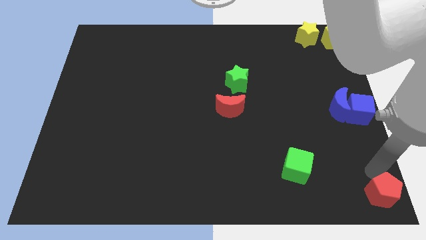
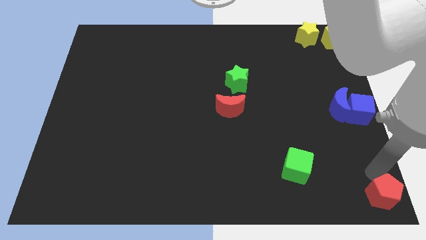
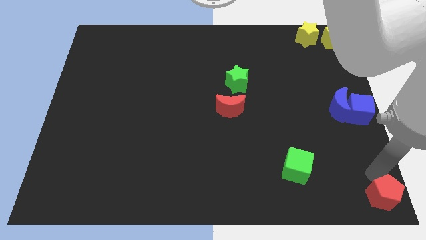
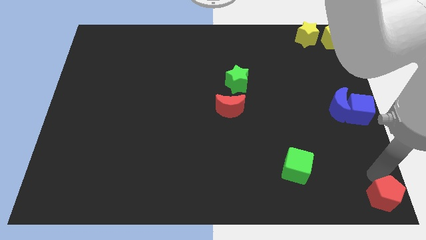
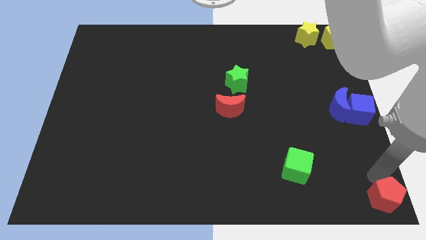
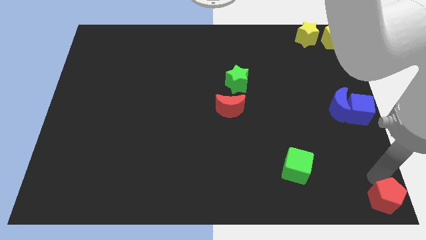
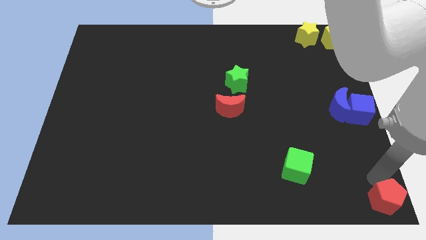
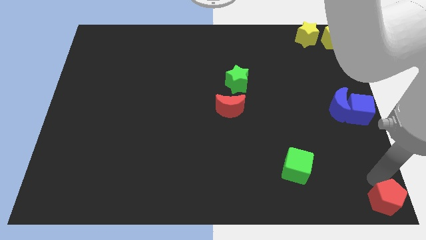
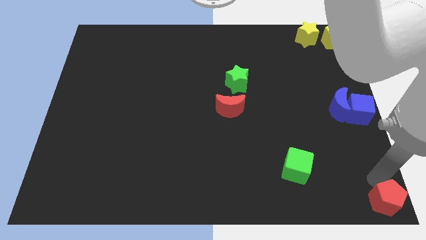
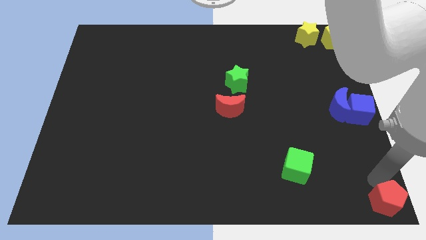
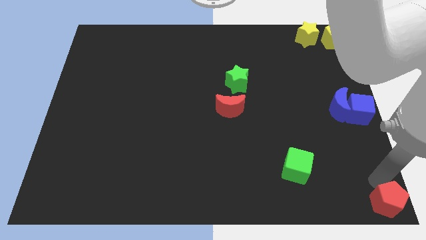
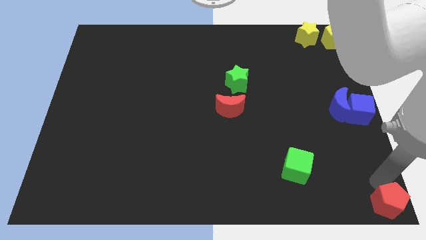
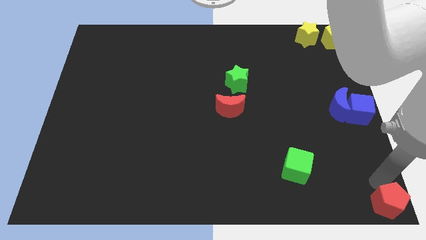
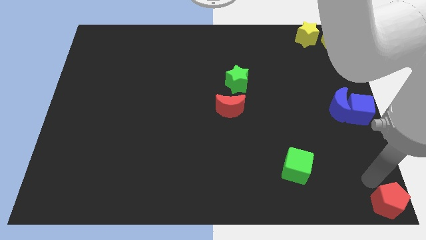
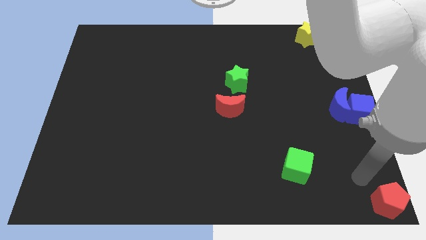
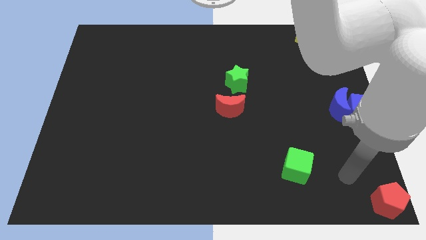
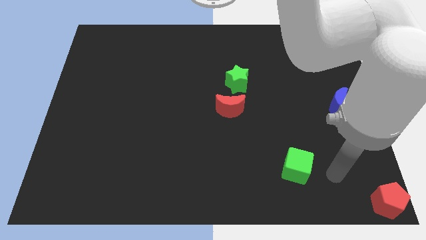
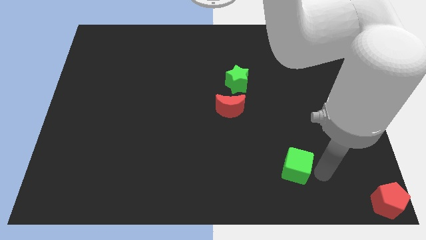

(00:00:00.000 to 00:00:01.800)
place the red pentagon to the bottom right corner of the board

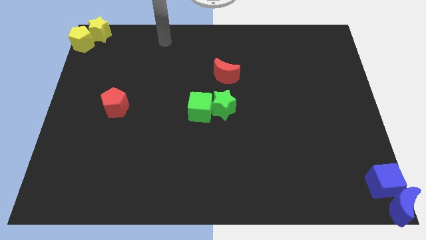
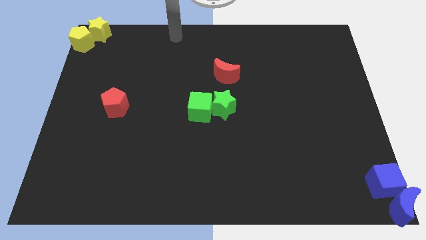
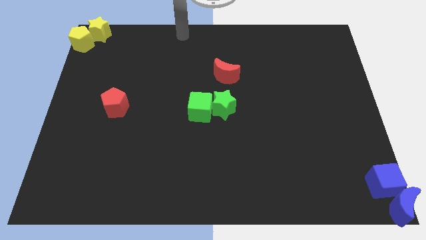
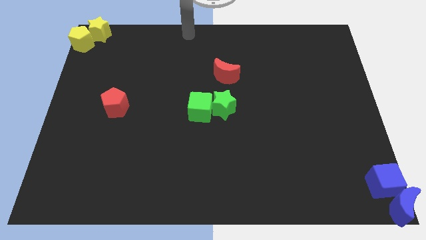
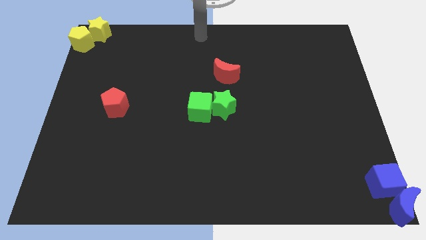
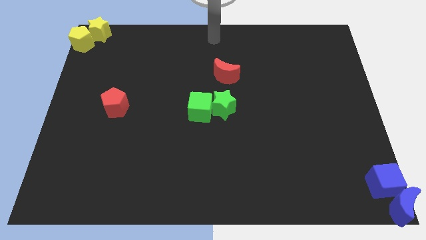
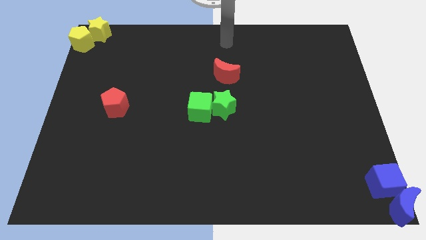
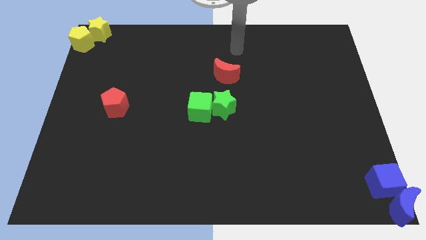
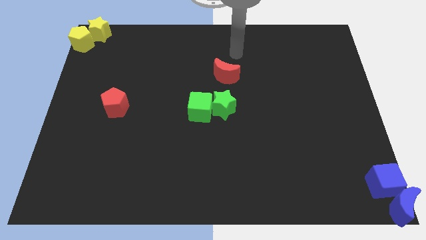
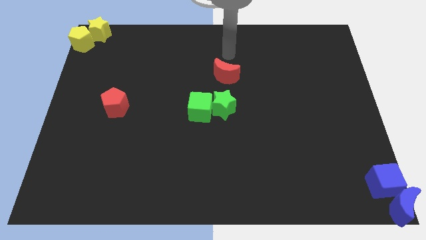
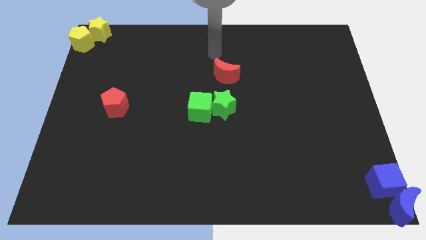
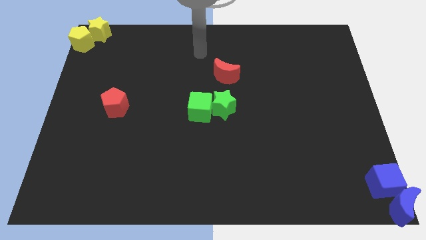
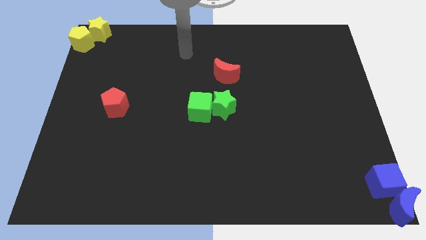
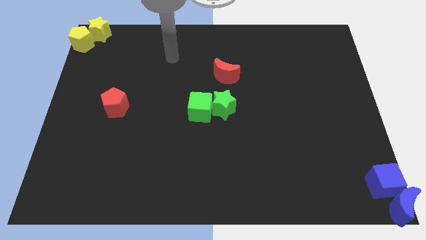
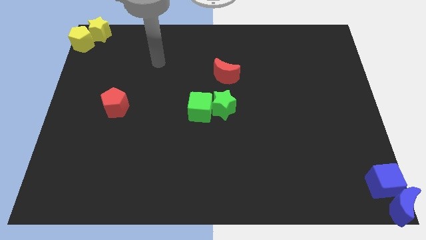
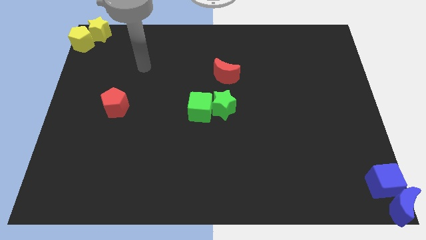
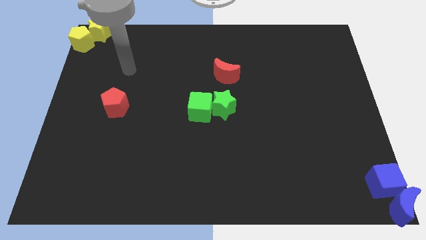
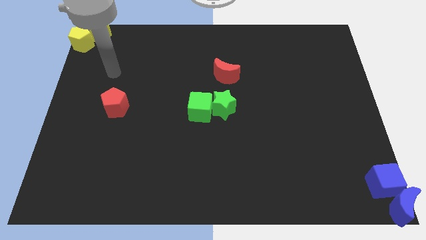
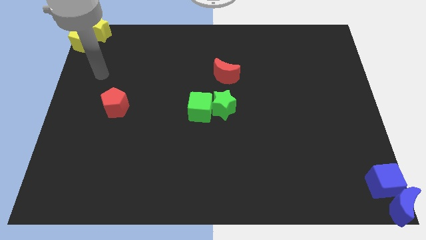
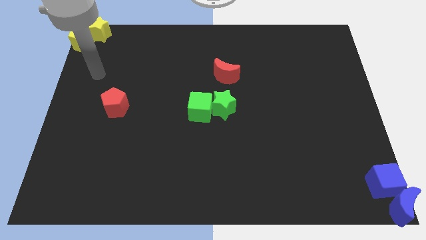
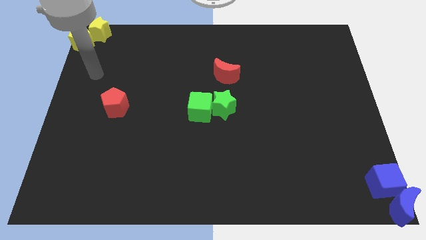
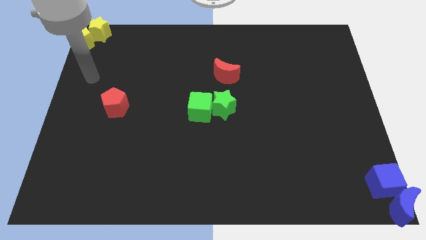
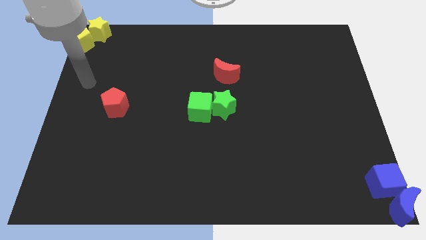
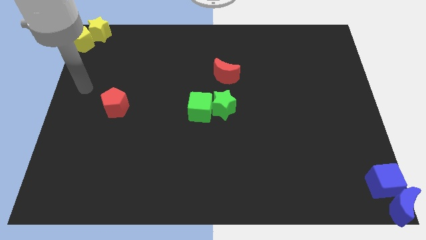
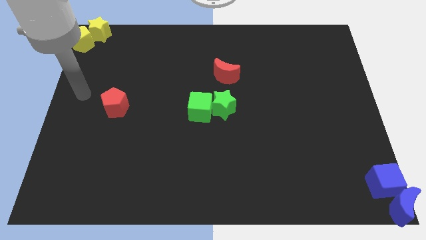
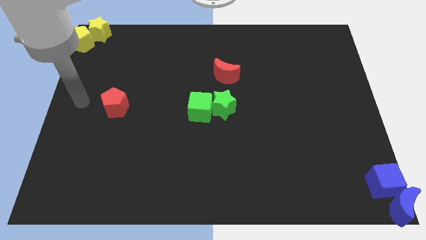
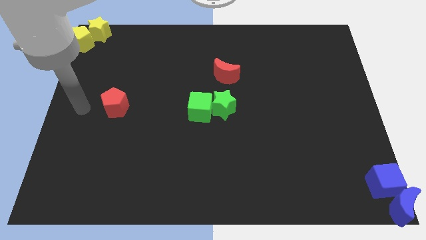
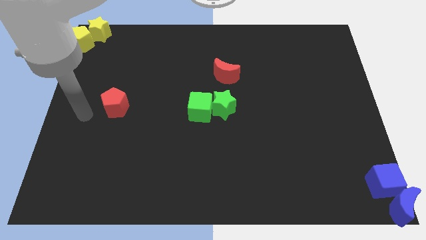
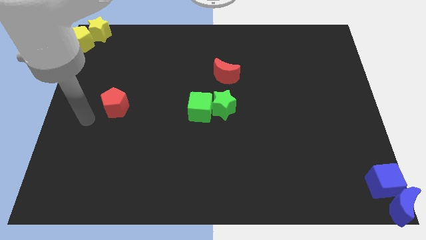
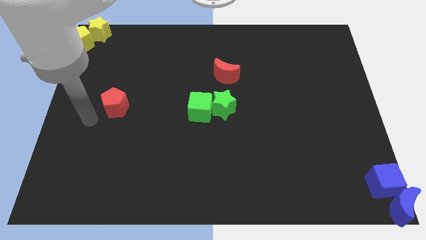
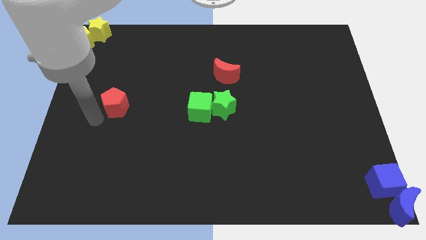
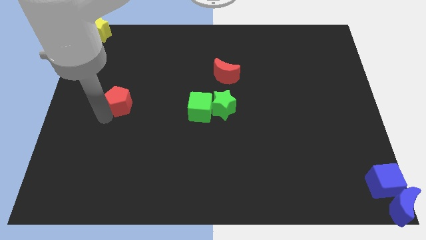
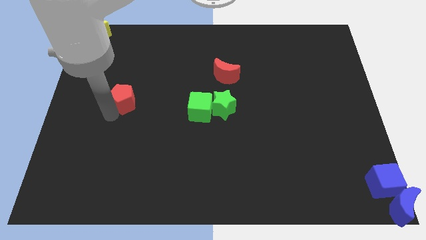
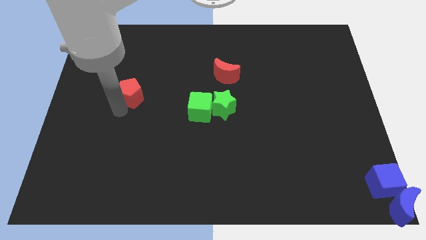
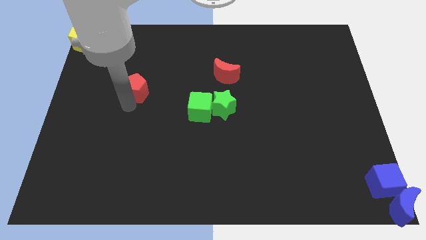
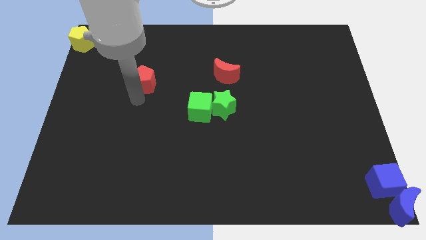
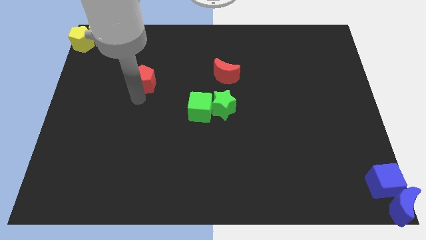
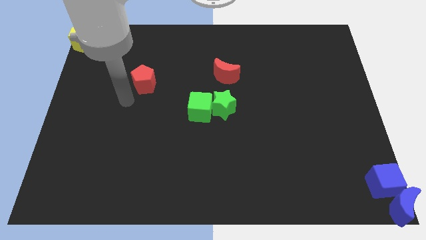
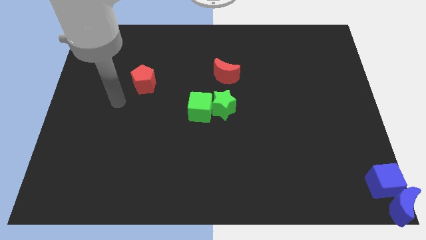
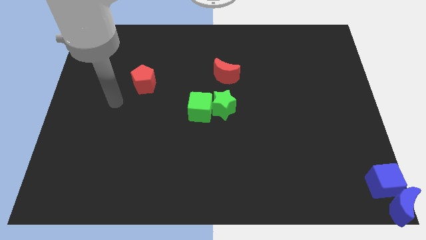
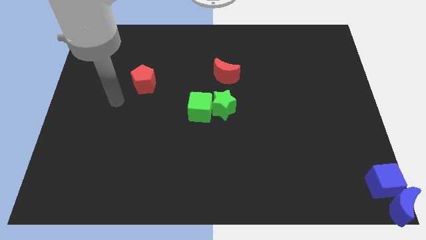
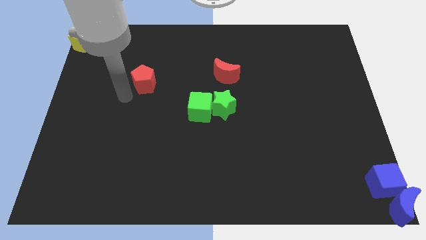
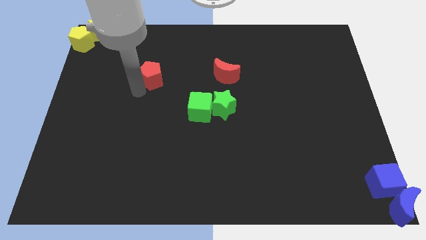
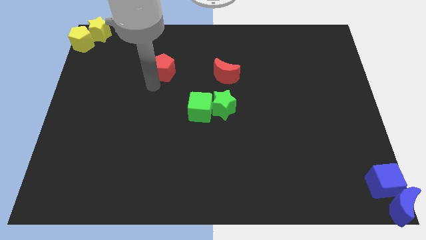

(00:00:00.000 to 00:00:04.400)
place the red pentagon horizontally to the left side of the red moon

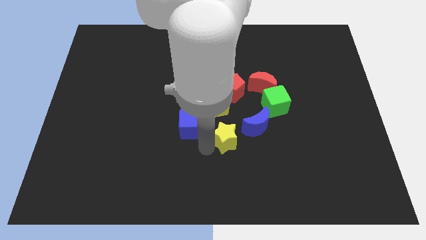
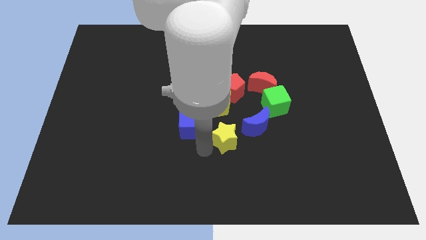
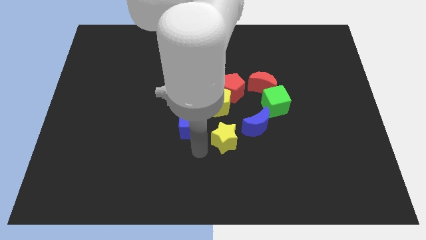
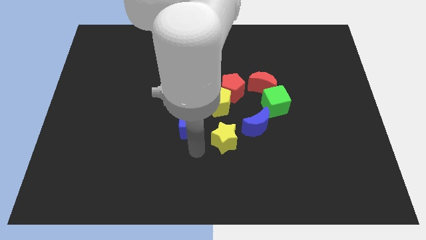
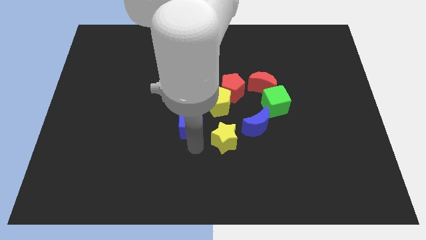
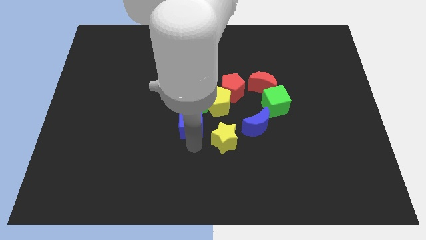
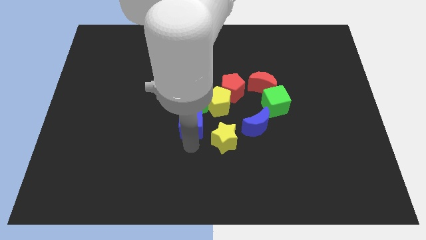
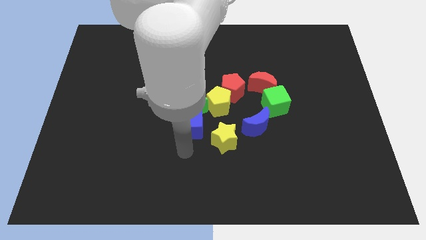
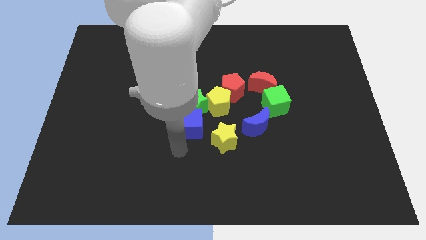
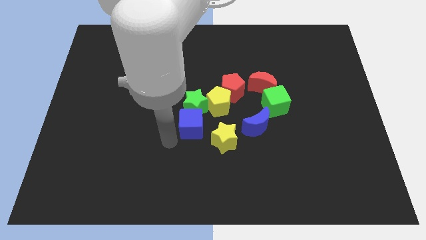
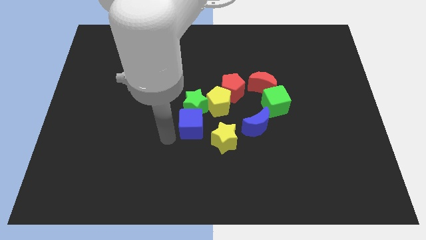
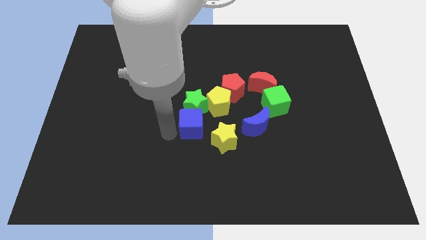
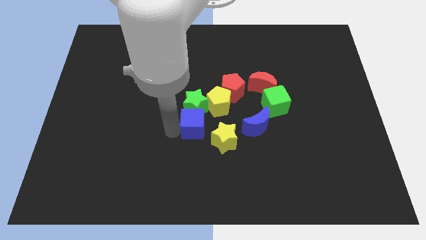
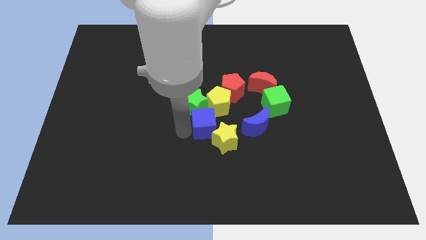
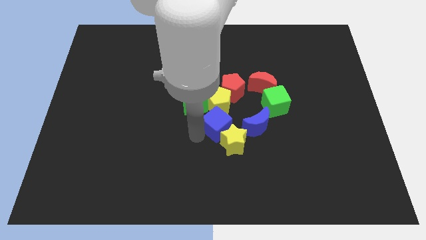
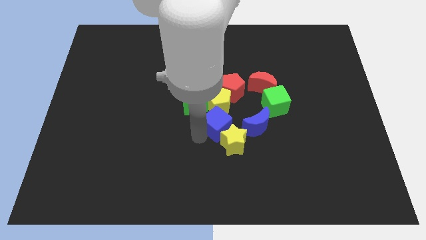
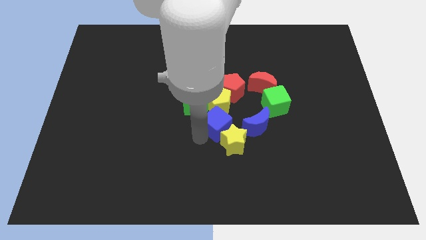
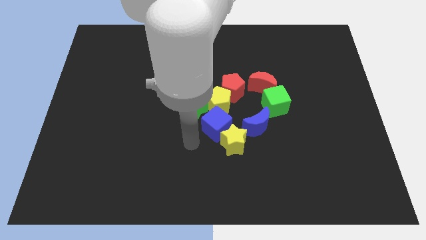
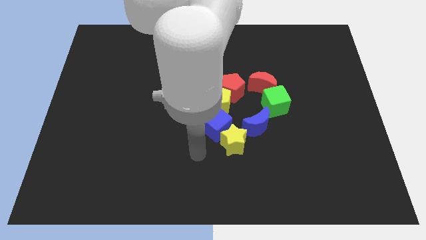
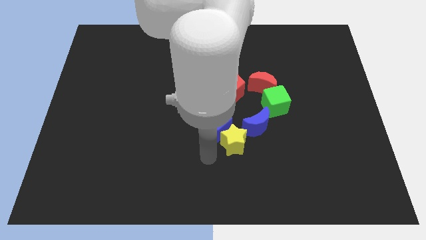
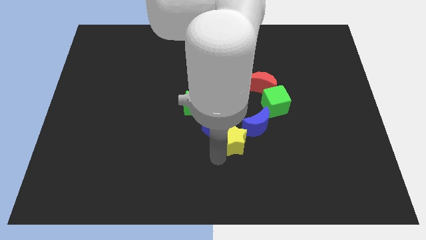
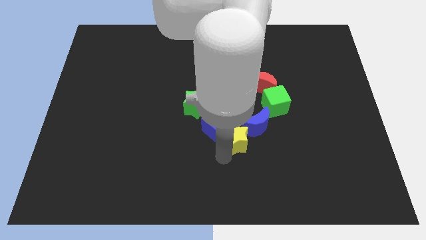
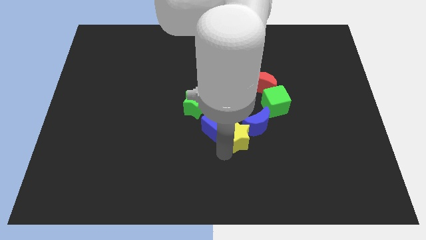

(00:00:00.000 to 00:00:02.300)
move blue cube into the top of yellow star

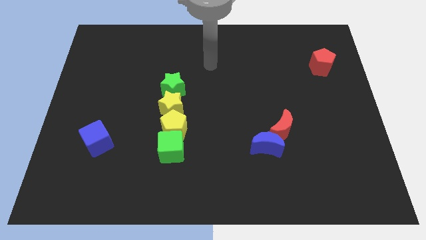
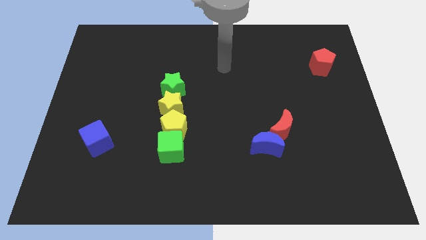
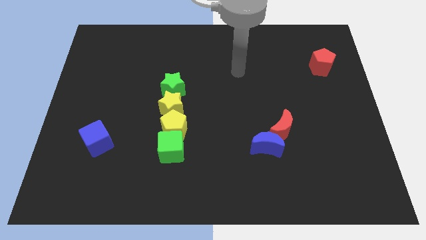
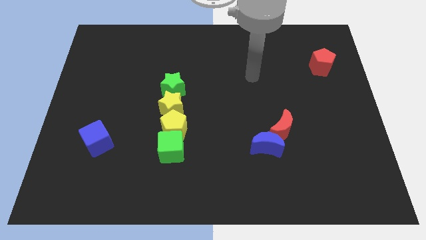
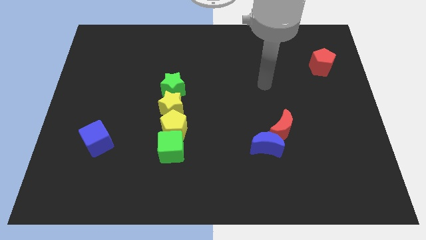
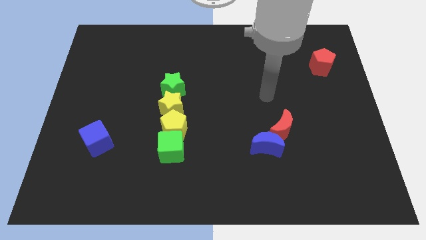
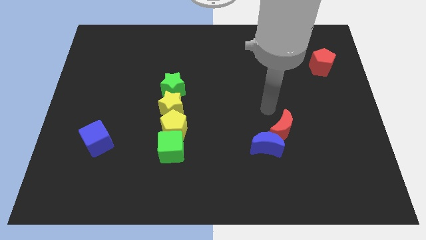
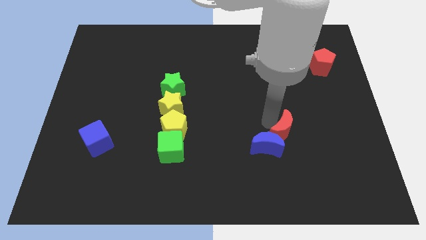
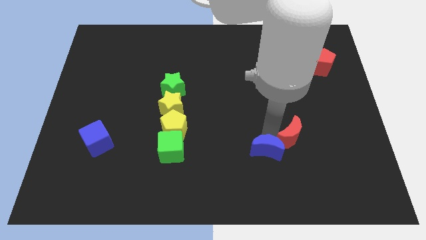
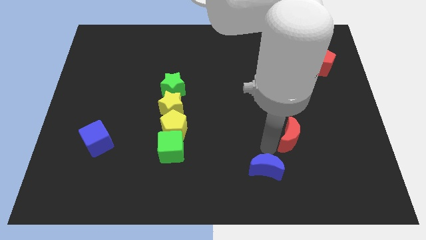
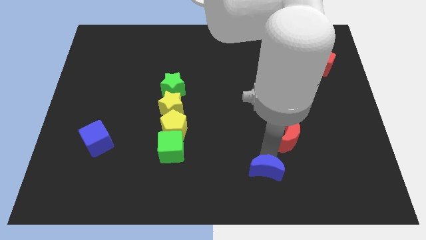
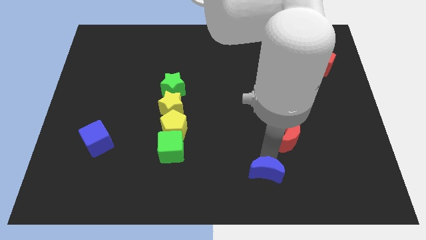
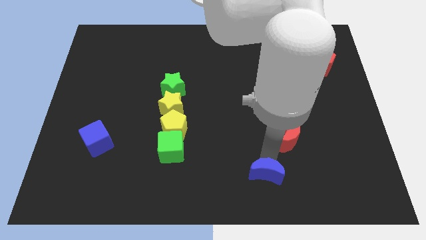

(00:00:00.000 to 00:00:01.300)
separate the blue crescent from the red crescent
